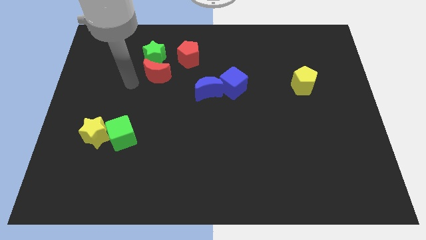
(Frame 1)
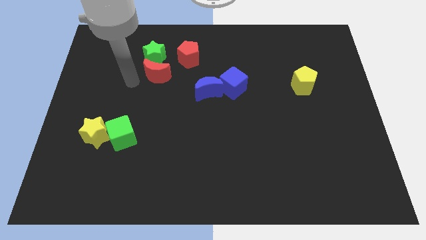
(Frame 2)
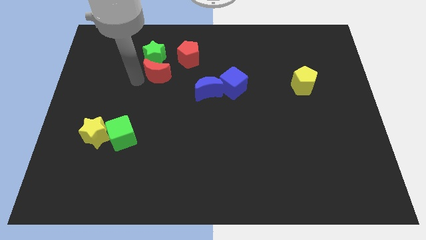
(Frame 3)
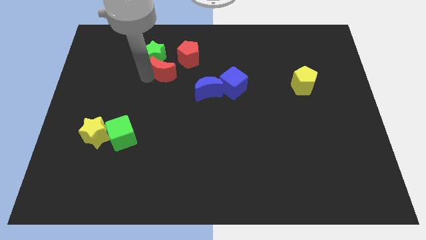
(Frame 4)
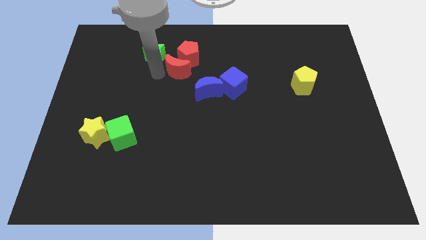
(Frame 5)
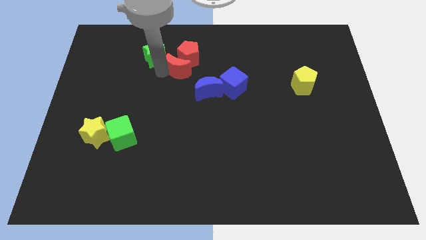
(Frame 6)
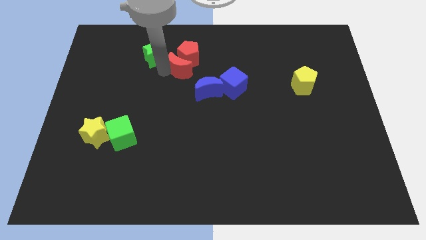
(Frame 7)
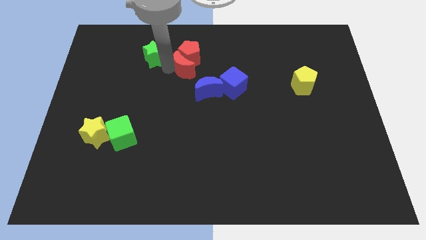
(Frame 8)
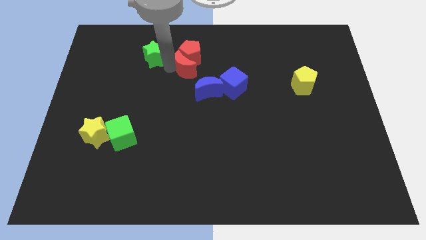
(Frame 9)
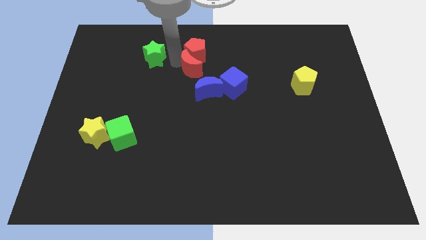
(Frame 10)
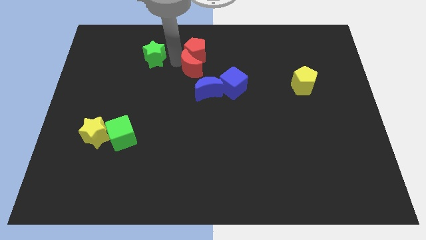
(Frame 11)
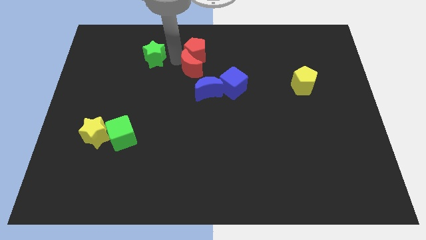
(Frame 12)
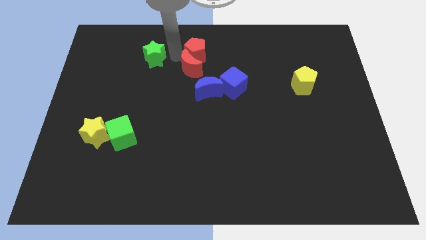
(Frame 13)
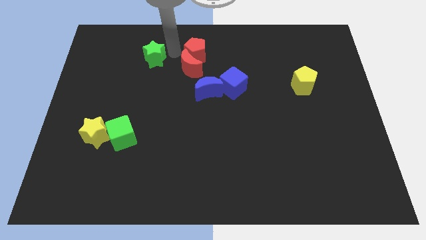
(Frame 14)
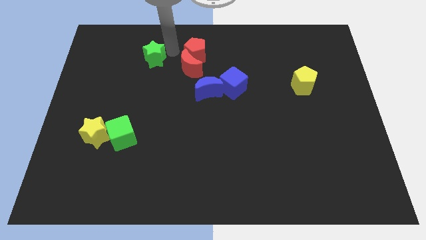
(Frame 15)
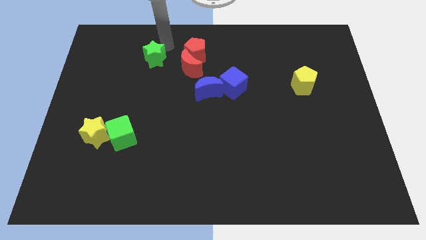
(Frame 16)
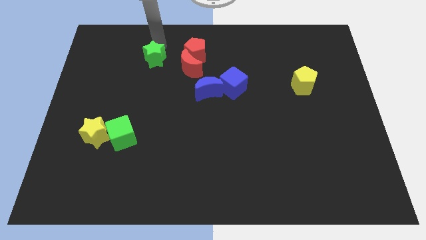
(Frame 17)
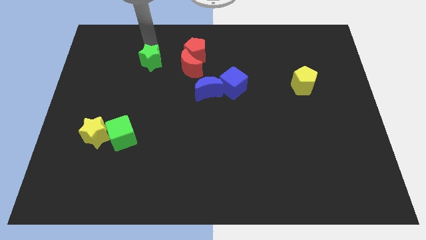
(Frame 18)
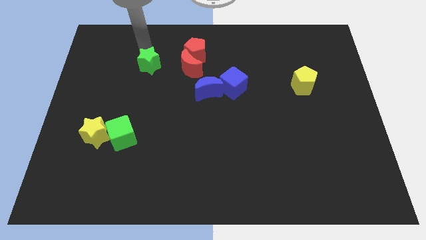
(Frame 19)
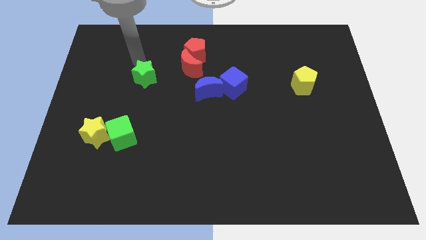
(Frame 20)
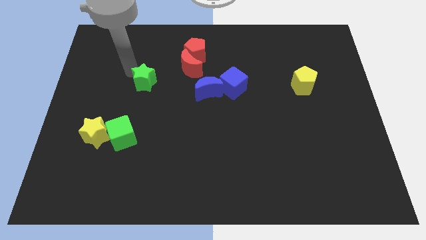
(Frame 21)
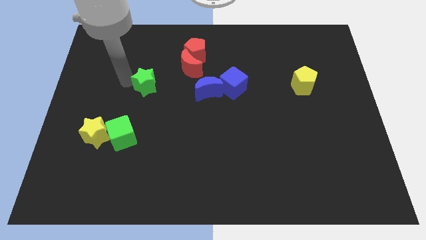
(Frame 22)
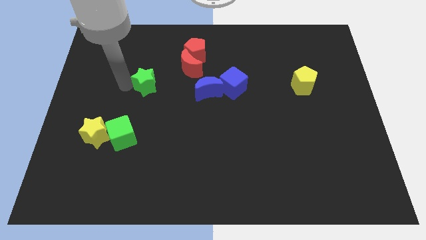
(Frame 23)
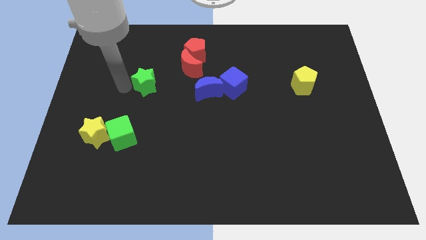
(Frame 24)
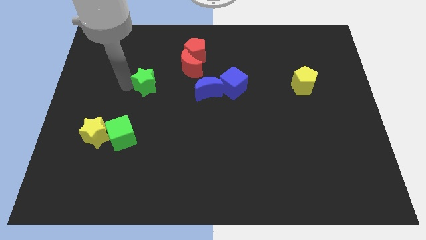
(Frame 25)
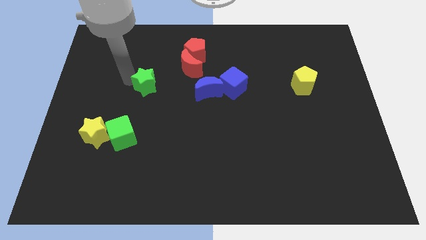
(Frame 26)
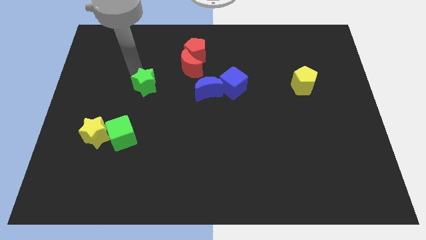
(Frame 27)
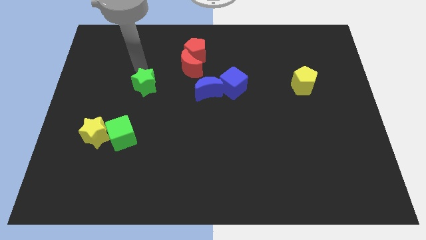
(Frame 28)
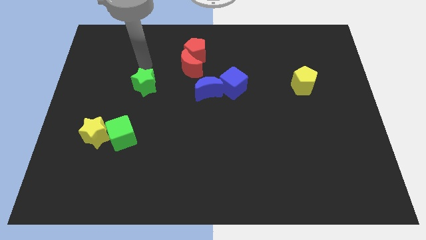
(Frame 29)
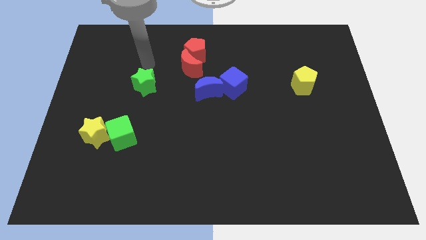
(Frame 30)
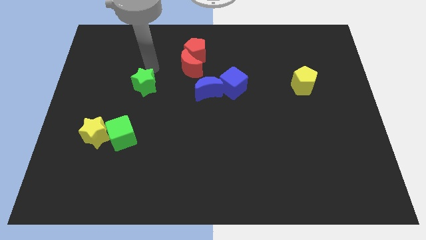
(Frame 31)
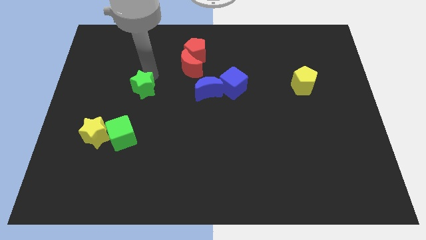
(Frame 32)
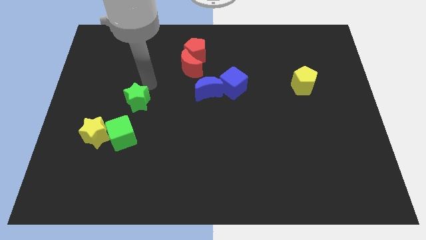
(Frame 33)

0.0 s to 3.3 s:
push the red crescent into the red pentagon

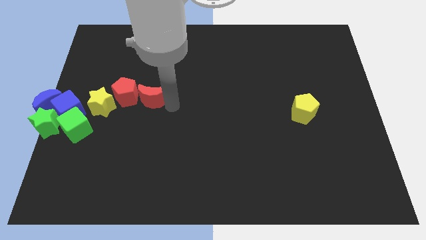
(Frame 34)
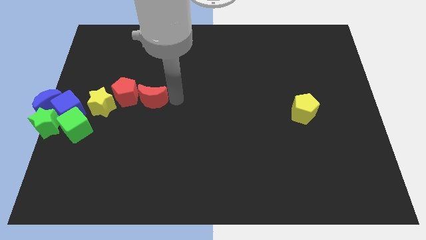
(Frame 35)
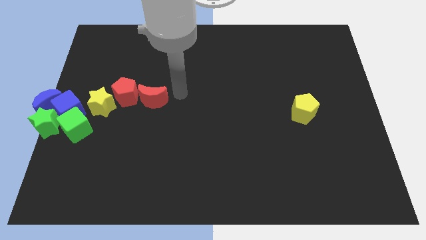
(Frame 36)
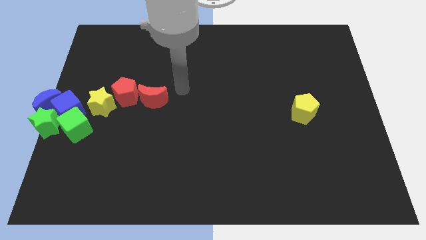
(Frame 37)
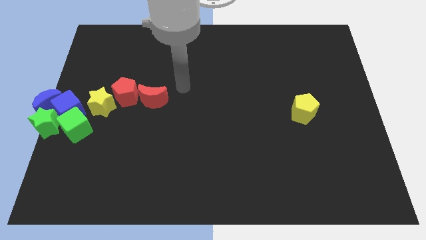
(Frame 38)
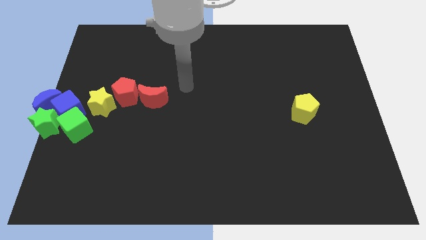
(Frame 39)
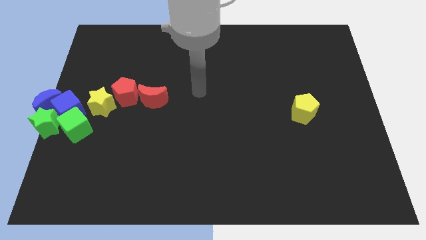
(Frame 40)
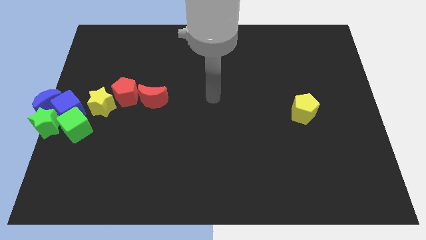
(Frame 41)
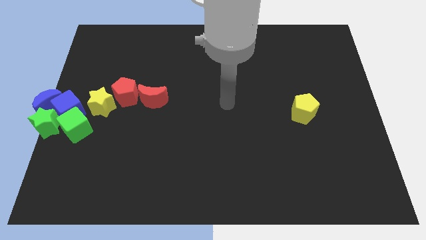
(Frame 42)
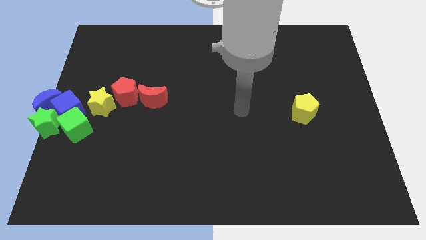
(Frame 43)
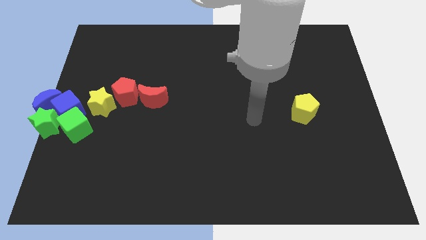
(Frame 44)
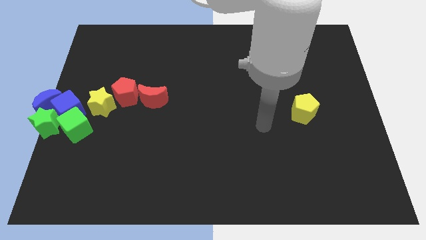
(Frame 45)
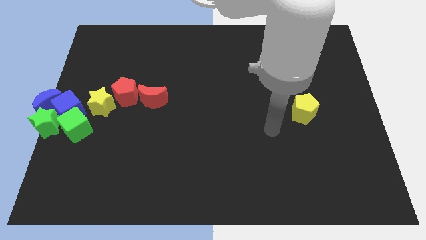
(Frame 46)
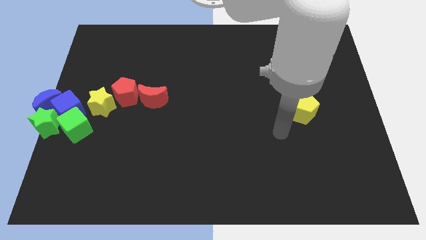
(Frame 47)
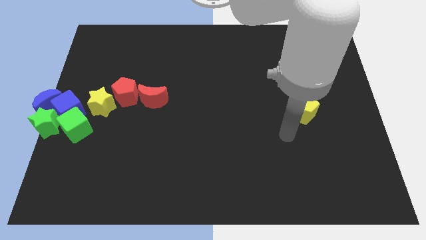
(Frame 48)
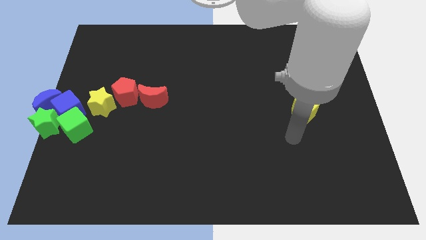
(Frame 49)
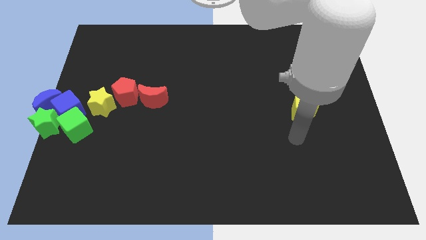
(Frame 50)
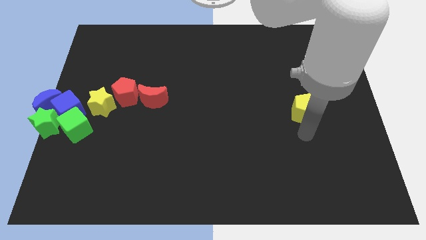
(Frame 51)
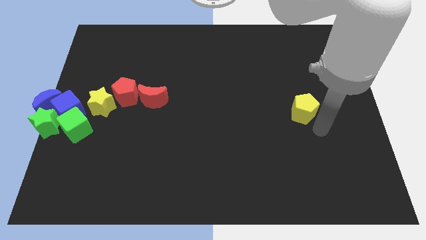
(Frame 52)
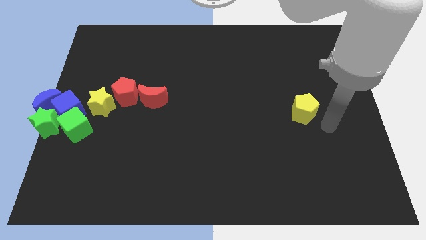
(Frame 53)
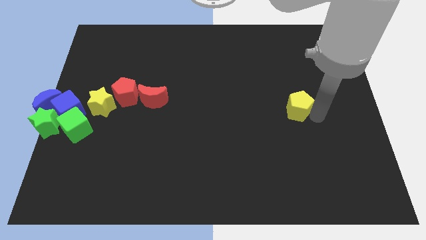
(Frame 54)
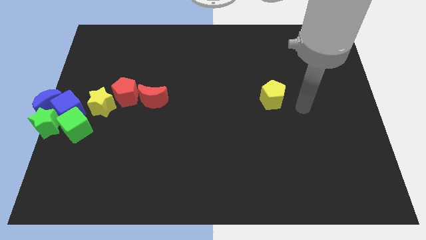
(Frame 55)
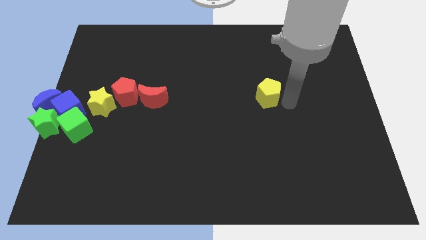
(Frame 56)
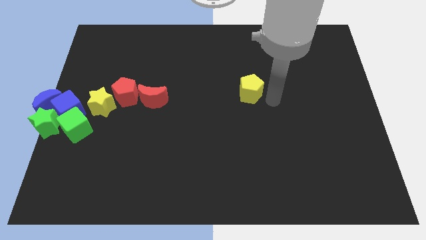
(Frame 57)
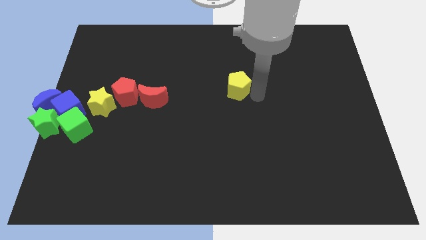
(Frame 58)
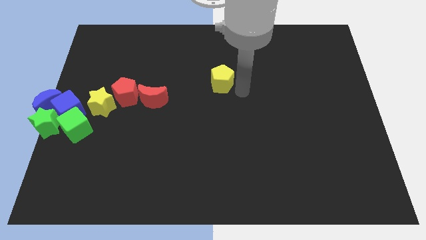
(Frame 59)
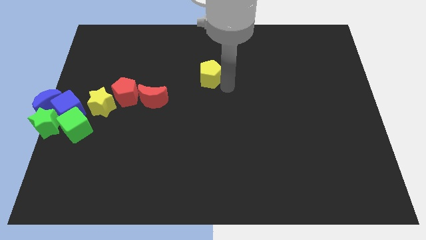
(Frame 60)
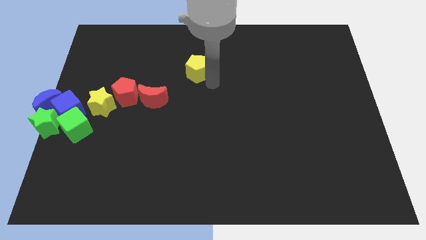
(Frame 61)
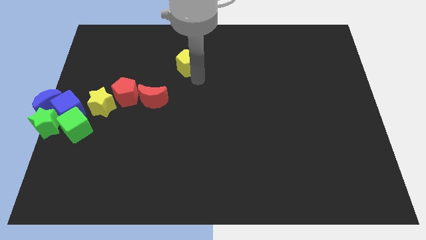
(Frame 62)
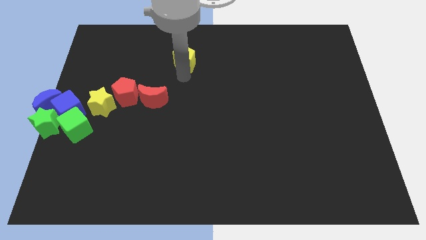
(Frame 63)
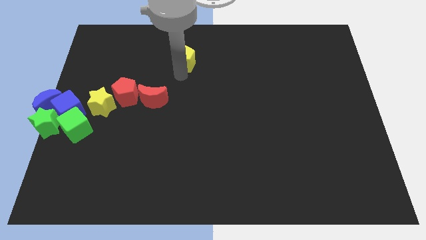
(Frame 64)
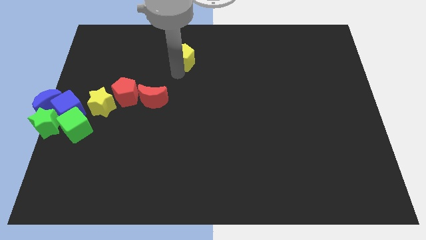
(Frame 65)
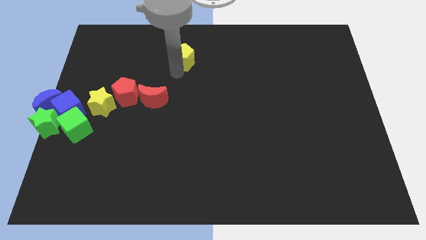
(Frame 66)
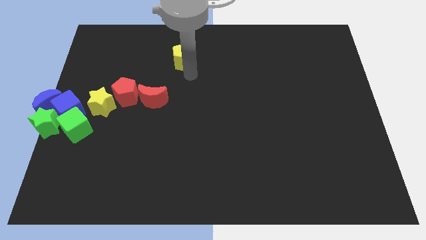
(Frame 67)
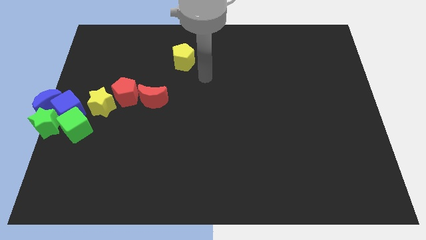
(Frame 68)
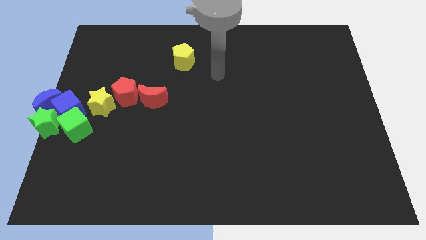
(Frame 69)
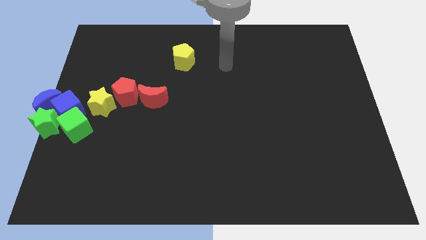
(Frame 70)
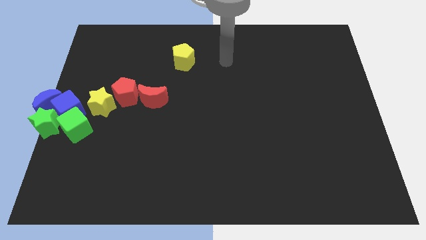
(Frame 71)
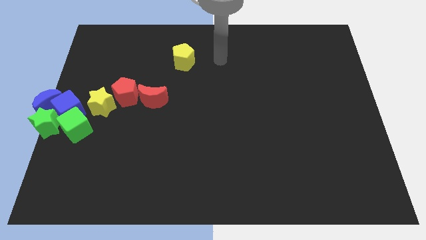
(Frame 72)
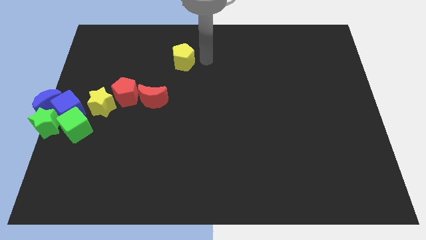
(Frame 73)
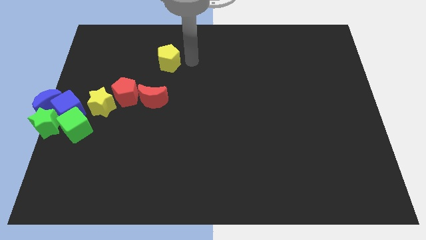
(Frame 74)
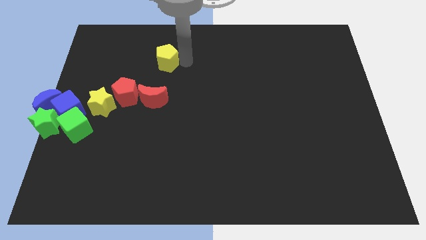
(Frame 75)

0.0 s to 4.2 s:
push the yellow pentagon towards the top left

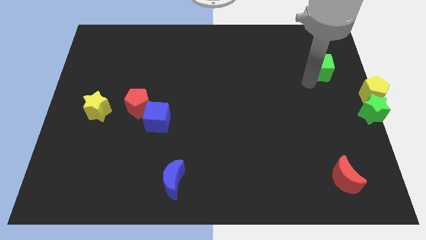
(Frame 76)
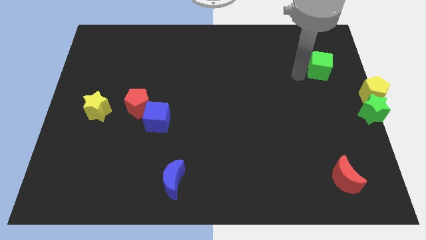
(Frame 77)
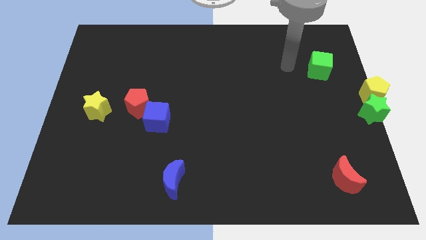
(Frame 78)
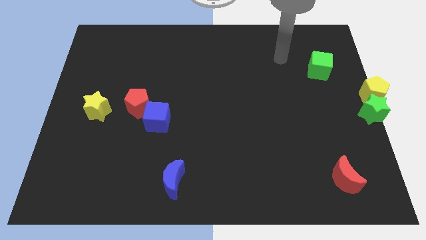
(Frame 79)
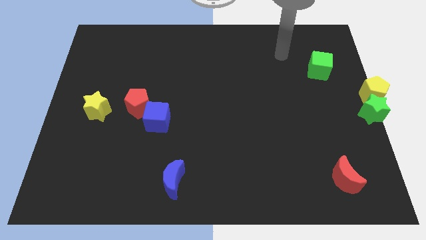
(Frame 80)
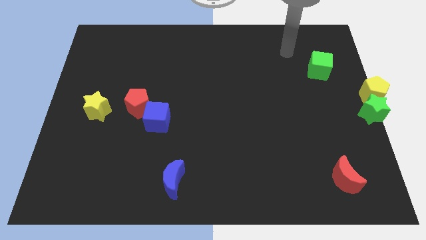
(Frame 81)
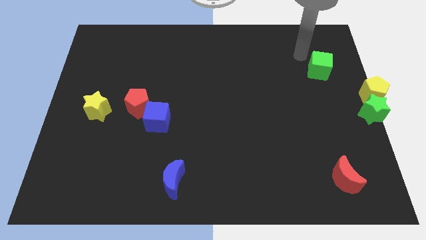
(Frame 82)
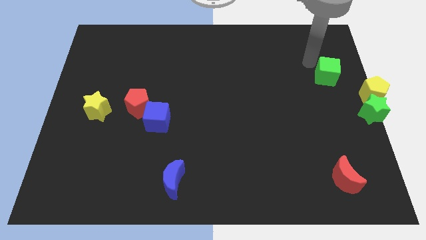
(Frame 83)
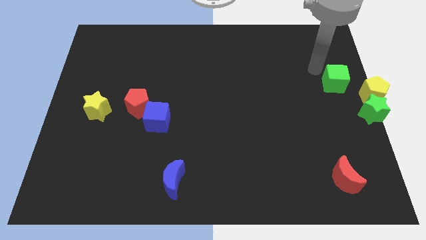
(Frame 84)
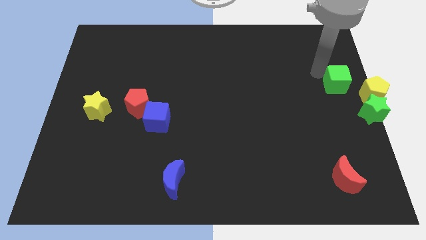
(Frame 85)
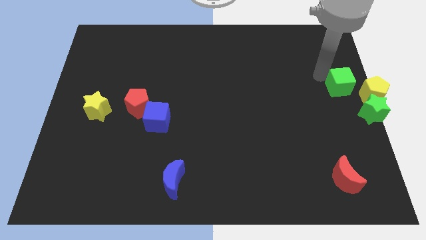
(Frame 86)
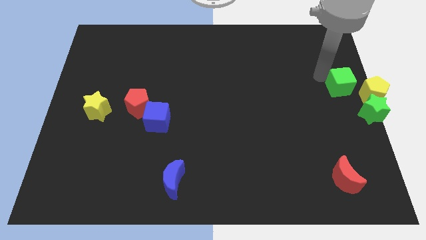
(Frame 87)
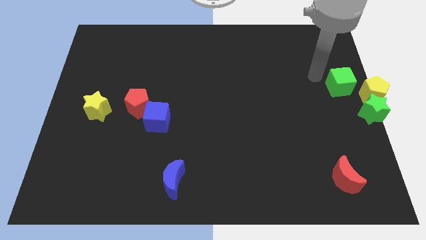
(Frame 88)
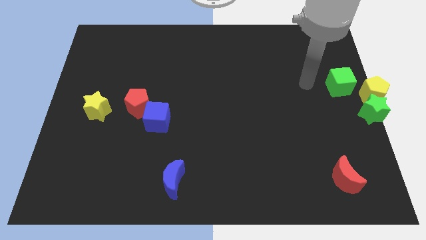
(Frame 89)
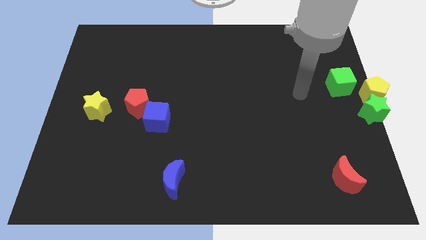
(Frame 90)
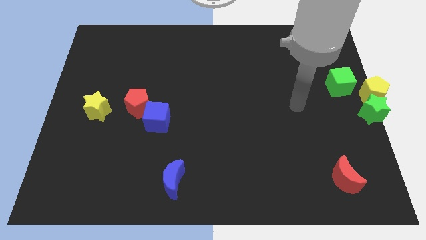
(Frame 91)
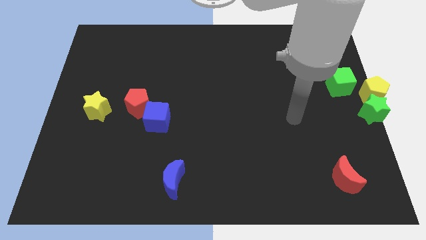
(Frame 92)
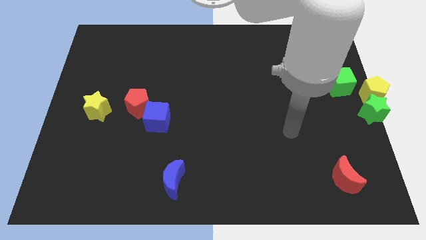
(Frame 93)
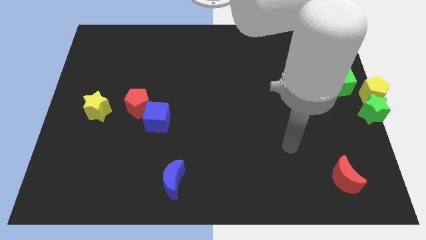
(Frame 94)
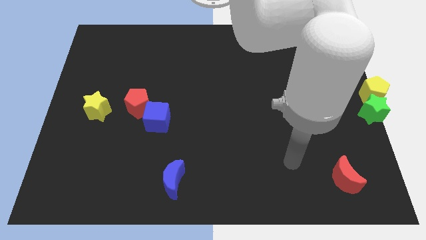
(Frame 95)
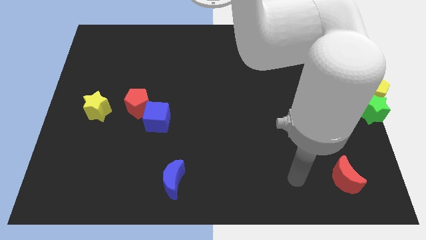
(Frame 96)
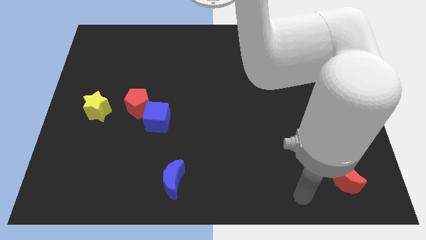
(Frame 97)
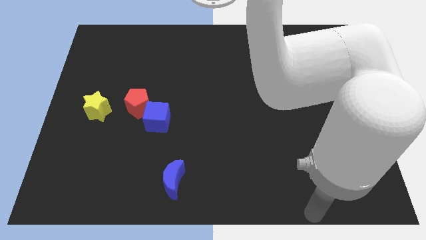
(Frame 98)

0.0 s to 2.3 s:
move the green cube close to the yellow pentagon
